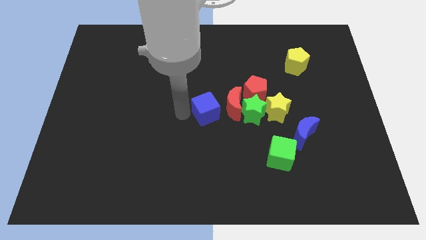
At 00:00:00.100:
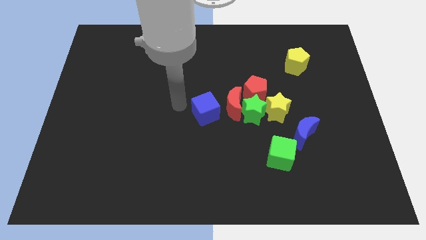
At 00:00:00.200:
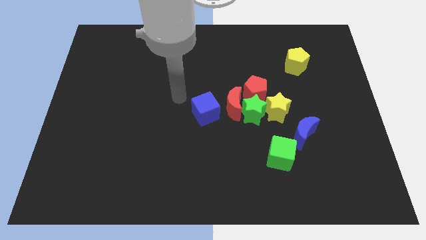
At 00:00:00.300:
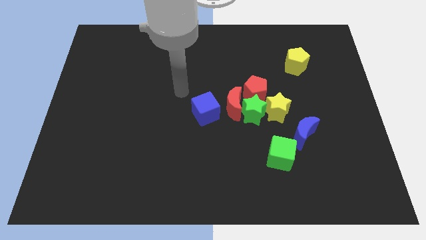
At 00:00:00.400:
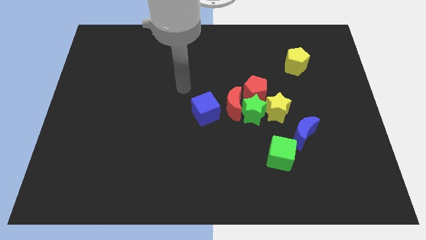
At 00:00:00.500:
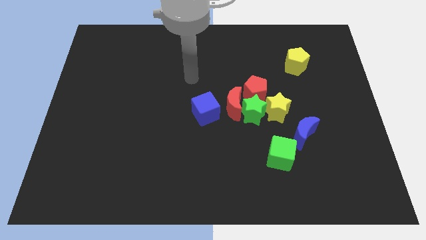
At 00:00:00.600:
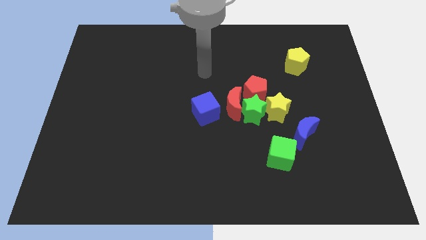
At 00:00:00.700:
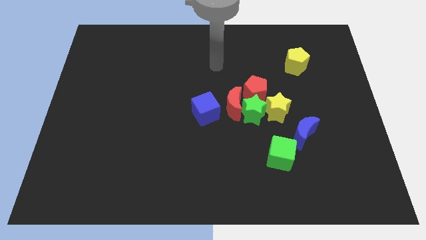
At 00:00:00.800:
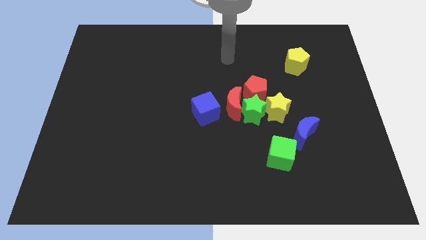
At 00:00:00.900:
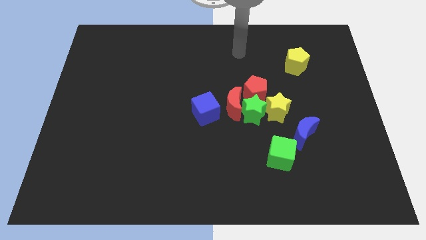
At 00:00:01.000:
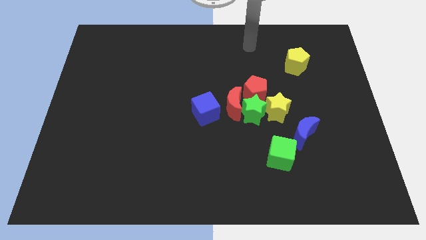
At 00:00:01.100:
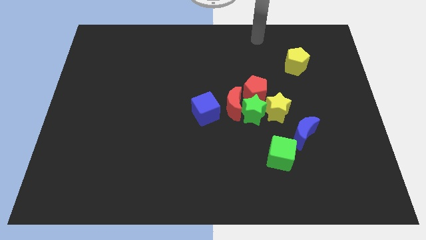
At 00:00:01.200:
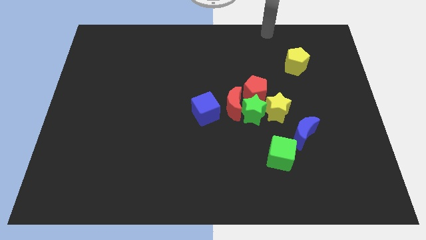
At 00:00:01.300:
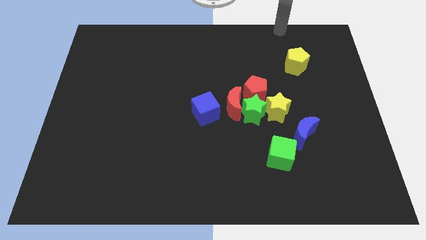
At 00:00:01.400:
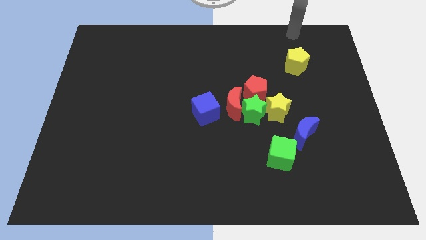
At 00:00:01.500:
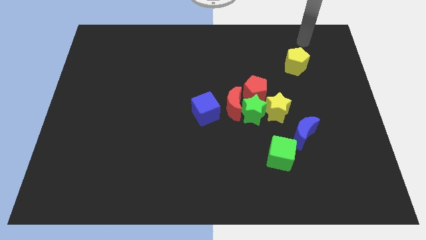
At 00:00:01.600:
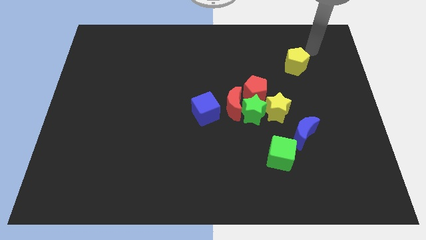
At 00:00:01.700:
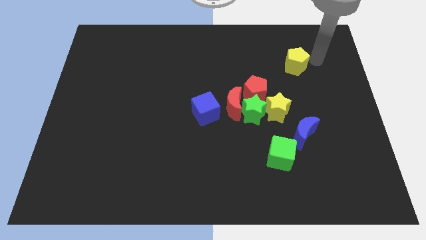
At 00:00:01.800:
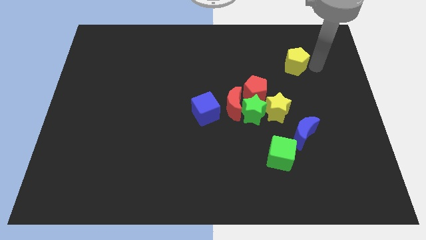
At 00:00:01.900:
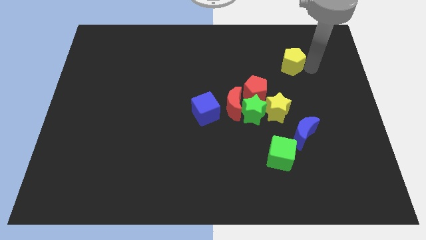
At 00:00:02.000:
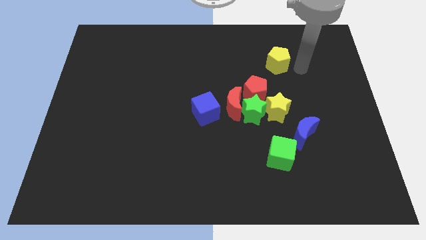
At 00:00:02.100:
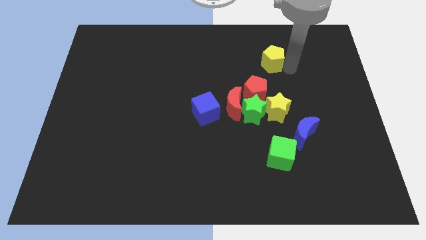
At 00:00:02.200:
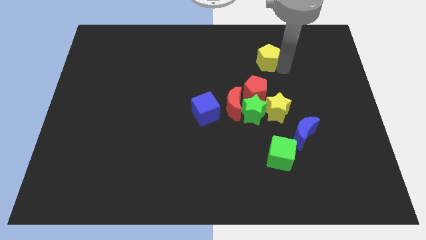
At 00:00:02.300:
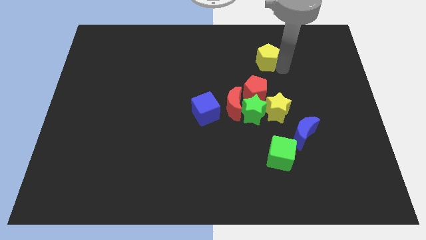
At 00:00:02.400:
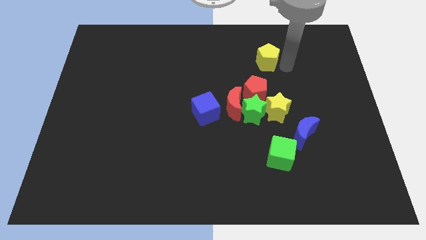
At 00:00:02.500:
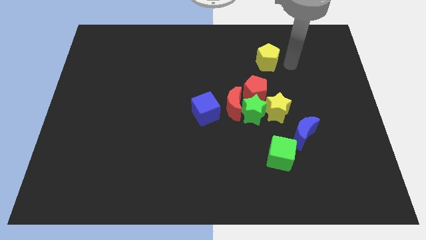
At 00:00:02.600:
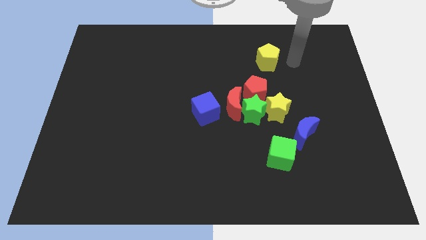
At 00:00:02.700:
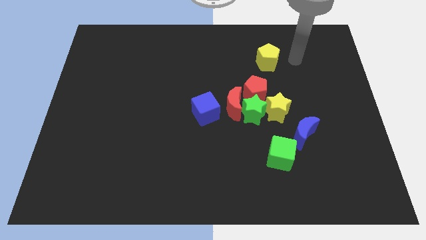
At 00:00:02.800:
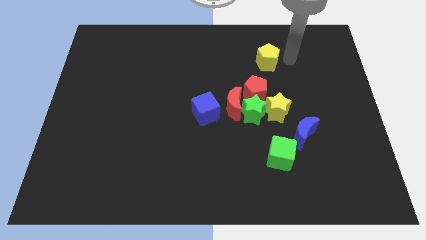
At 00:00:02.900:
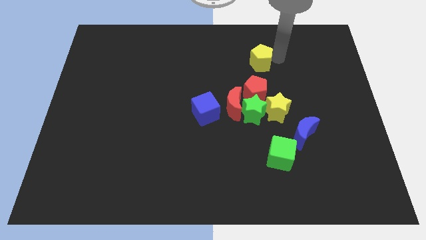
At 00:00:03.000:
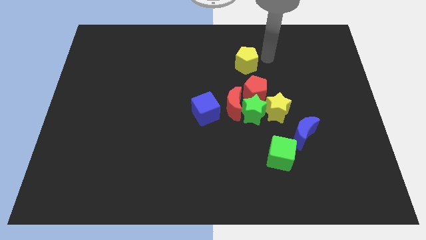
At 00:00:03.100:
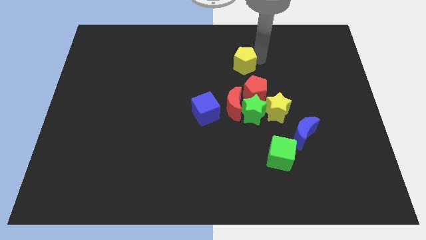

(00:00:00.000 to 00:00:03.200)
place the yellow pentagon above the red pentagon

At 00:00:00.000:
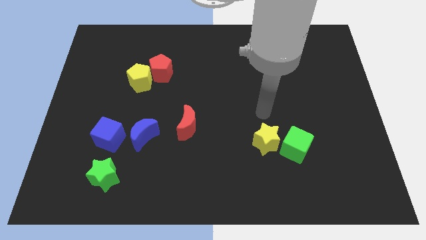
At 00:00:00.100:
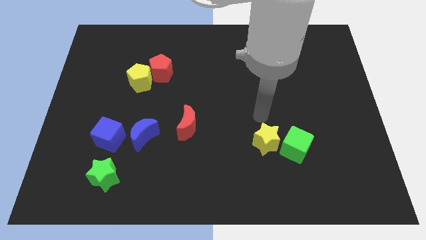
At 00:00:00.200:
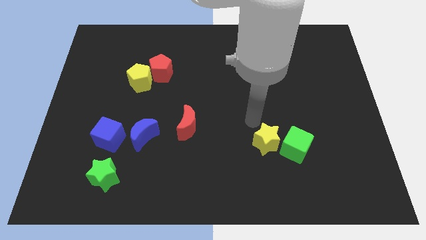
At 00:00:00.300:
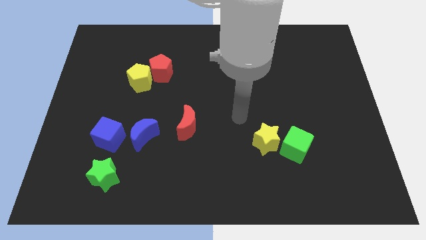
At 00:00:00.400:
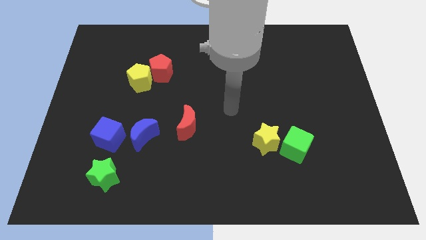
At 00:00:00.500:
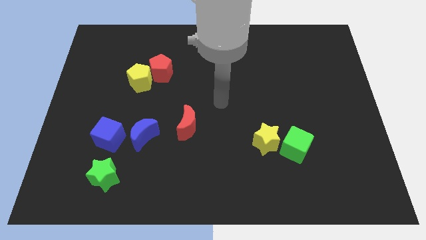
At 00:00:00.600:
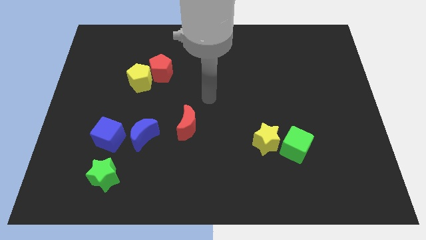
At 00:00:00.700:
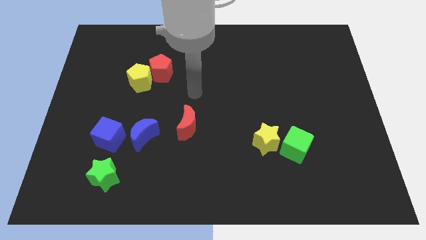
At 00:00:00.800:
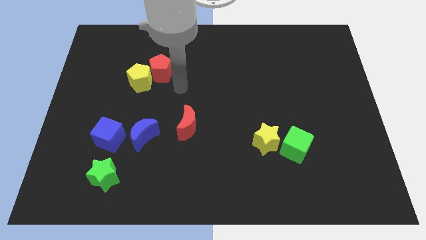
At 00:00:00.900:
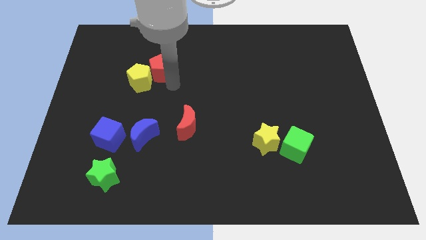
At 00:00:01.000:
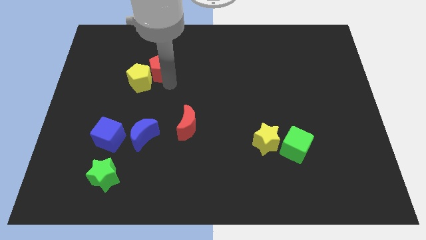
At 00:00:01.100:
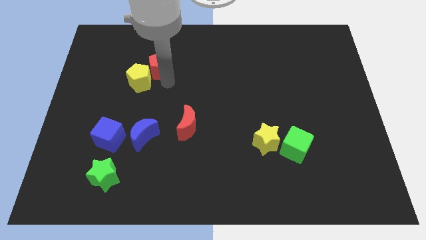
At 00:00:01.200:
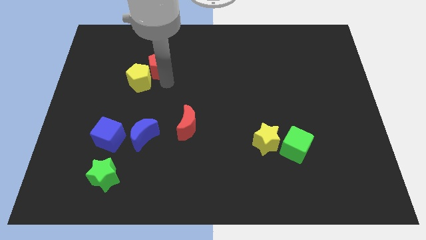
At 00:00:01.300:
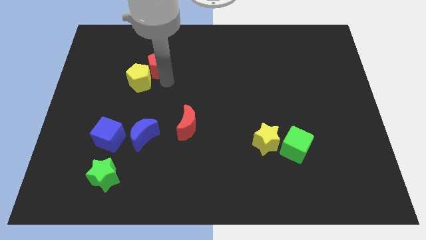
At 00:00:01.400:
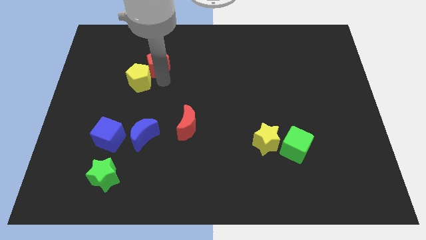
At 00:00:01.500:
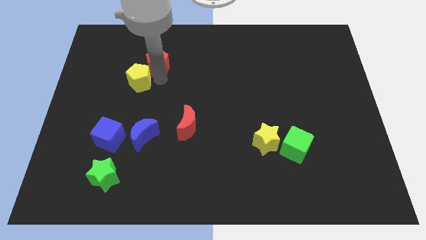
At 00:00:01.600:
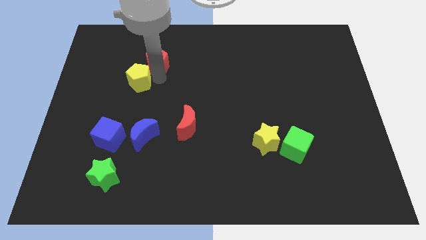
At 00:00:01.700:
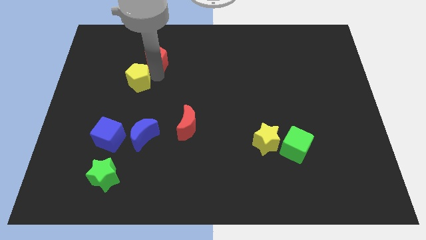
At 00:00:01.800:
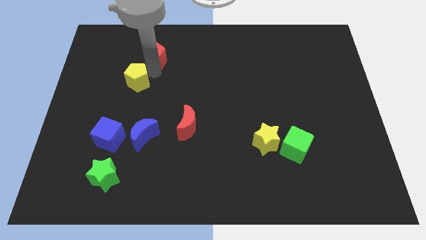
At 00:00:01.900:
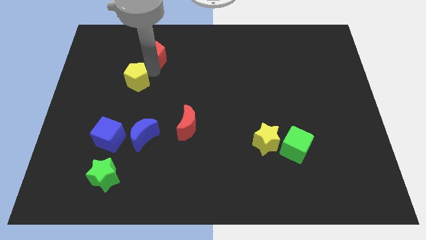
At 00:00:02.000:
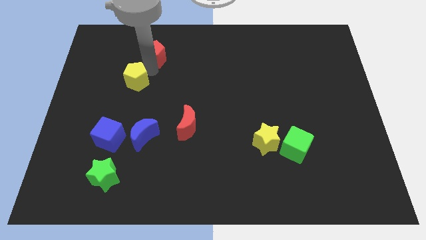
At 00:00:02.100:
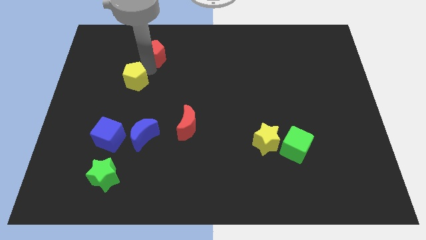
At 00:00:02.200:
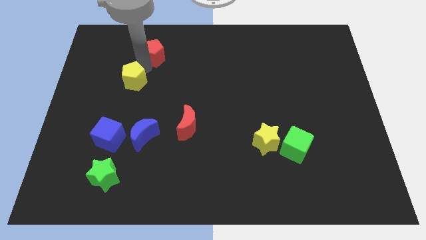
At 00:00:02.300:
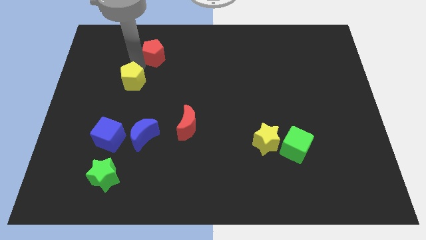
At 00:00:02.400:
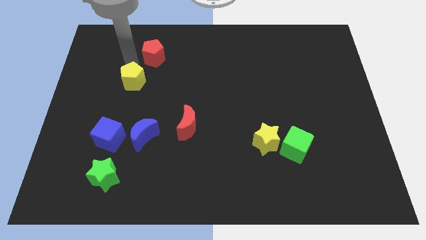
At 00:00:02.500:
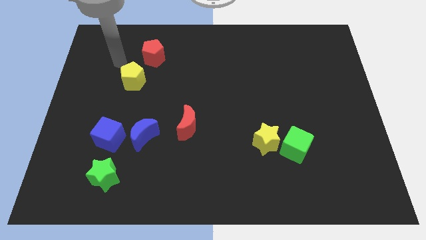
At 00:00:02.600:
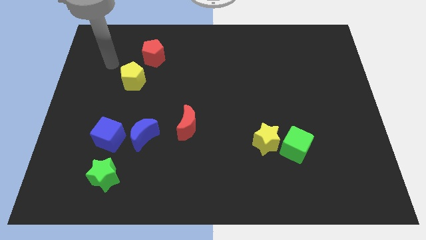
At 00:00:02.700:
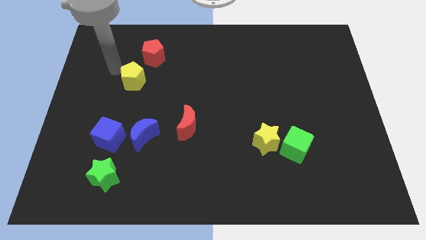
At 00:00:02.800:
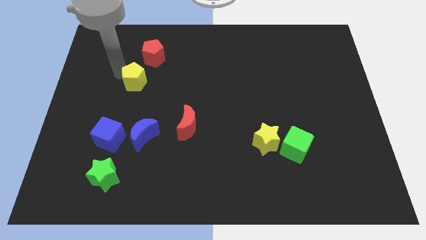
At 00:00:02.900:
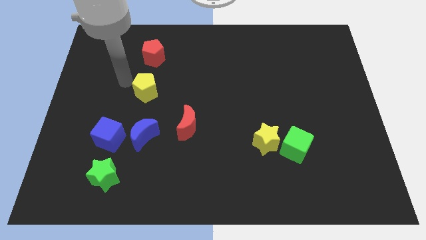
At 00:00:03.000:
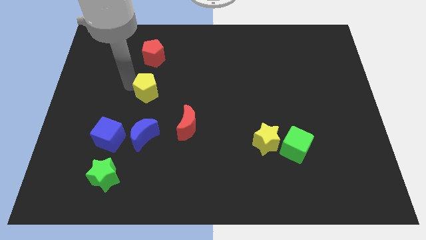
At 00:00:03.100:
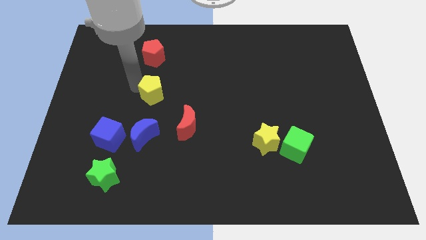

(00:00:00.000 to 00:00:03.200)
separate the yellow and red pentagons

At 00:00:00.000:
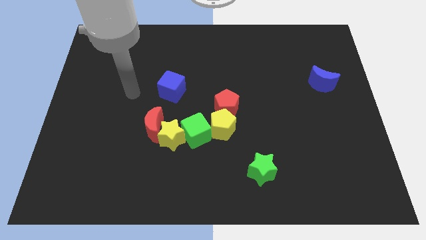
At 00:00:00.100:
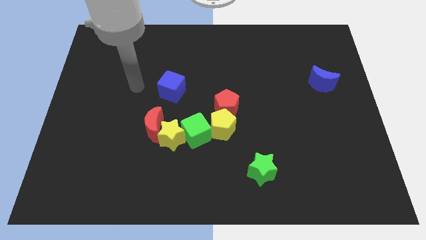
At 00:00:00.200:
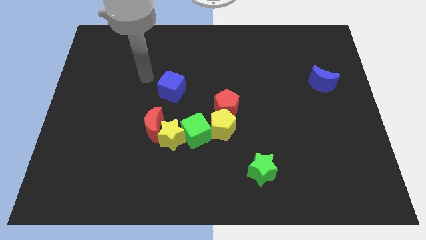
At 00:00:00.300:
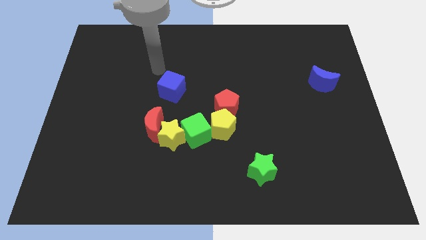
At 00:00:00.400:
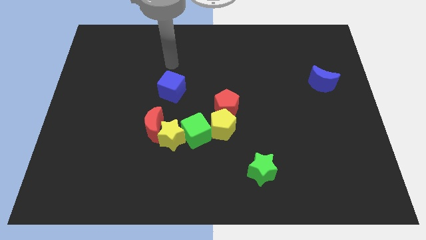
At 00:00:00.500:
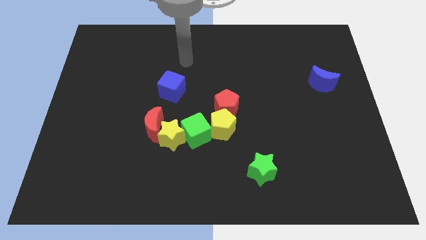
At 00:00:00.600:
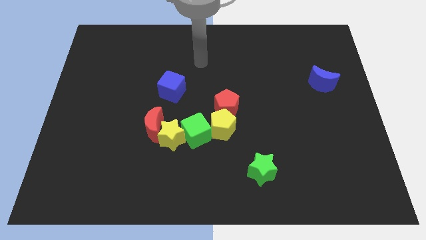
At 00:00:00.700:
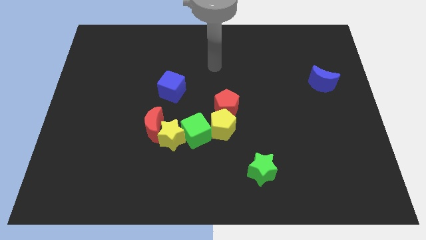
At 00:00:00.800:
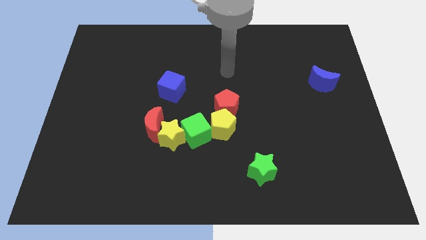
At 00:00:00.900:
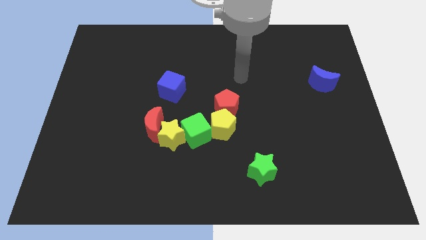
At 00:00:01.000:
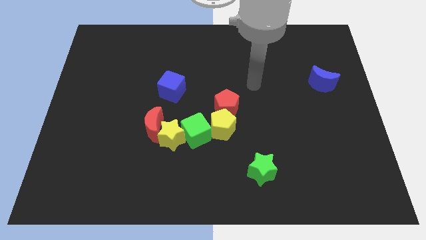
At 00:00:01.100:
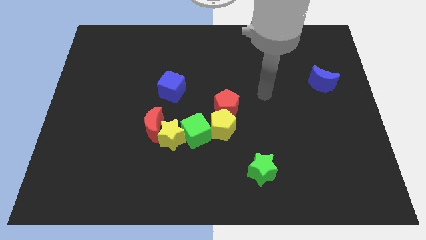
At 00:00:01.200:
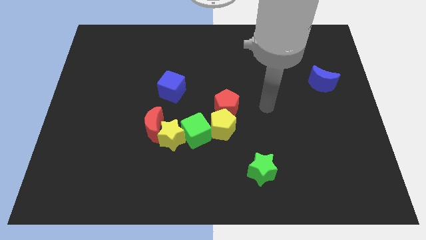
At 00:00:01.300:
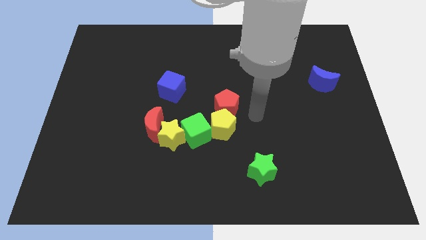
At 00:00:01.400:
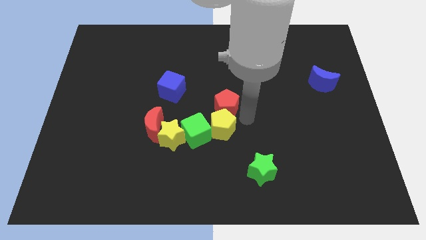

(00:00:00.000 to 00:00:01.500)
move your arm to the right of the red pentagon

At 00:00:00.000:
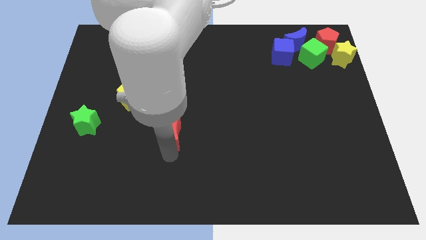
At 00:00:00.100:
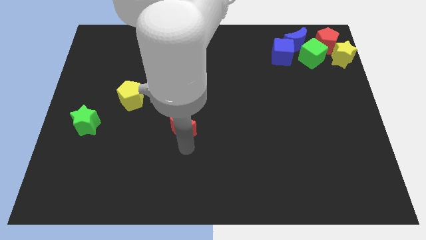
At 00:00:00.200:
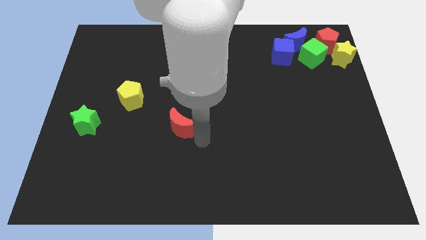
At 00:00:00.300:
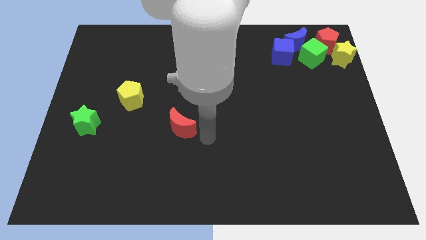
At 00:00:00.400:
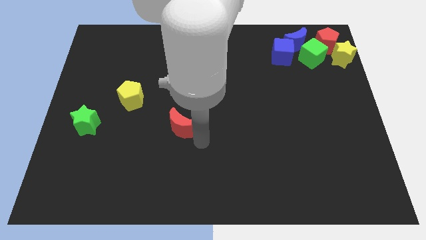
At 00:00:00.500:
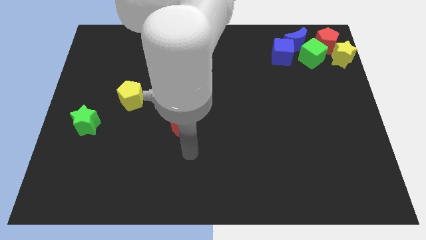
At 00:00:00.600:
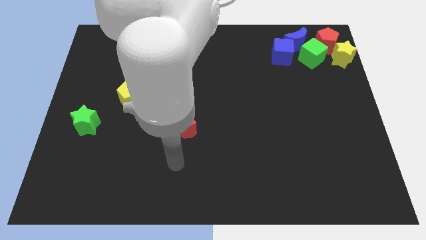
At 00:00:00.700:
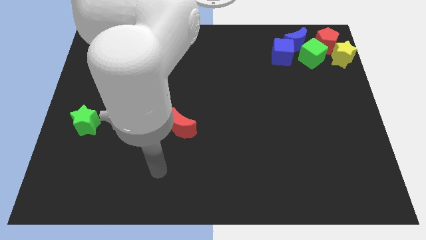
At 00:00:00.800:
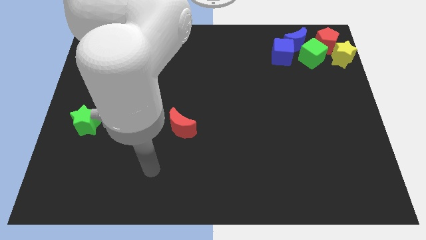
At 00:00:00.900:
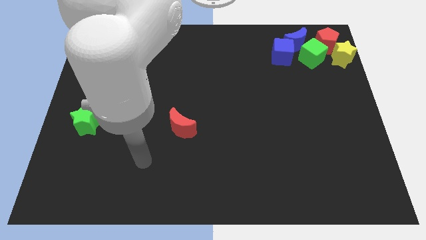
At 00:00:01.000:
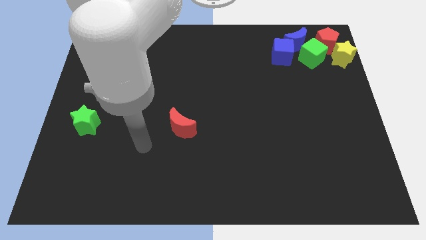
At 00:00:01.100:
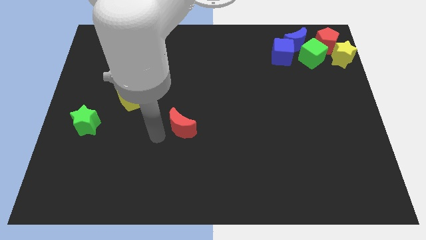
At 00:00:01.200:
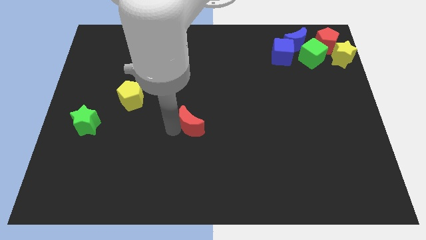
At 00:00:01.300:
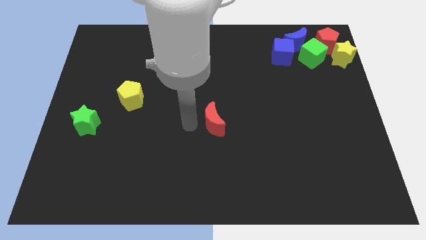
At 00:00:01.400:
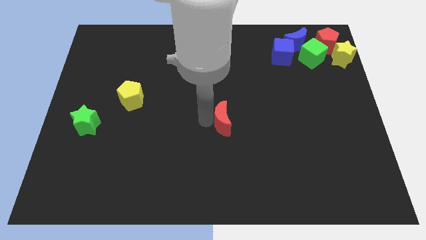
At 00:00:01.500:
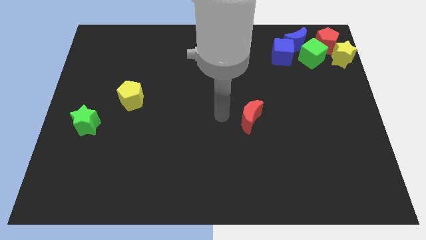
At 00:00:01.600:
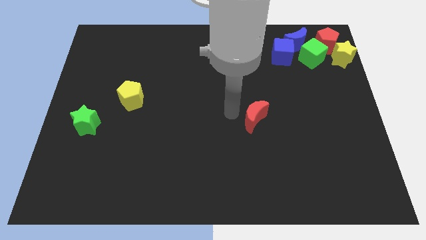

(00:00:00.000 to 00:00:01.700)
push the red crescent towards the green cube
